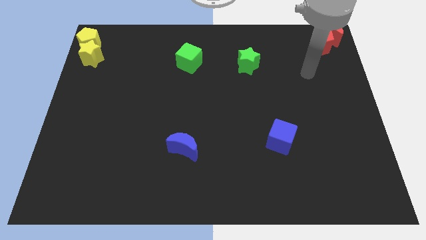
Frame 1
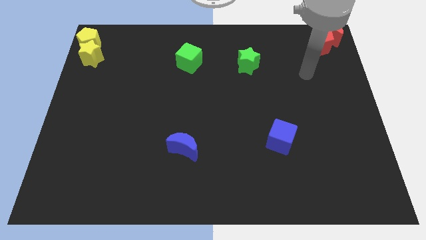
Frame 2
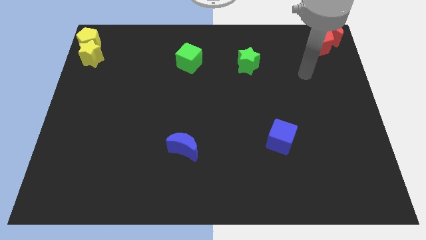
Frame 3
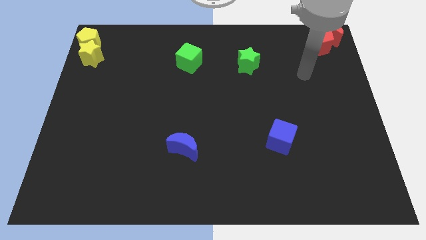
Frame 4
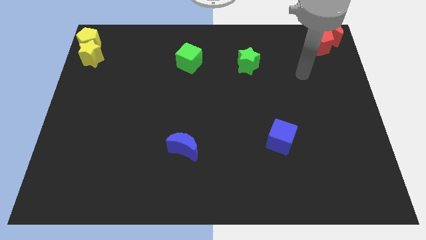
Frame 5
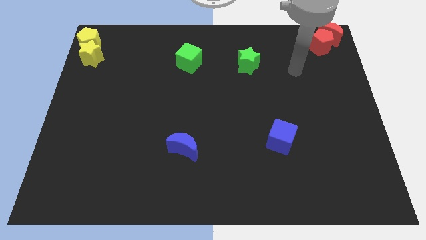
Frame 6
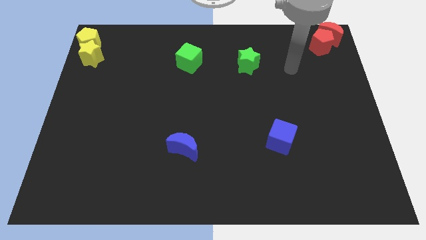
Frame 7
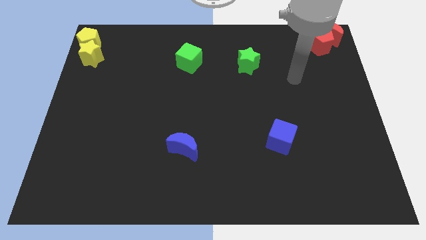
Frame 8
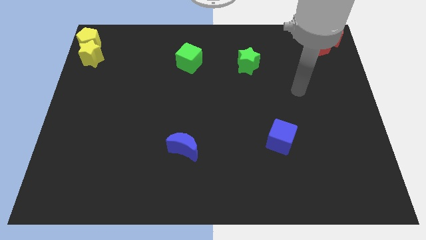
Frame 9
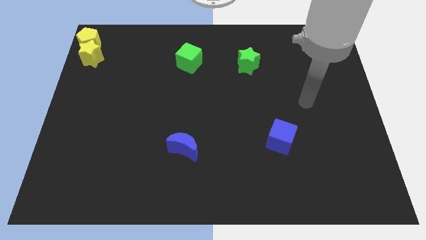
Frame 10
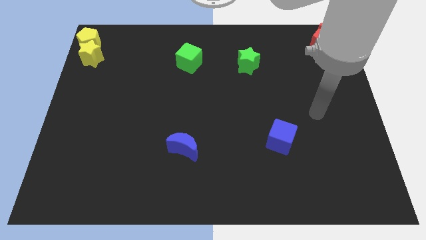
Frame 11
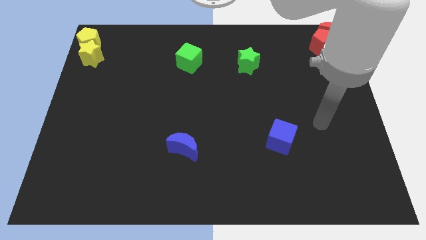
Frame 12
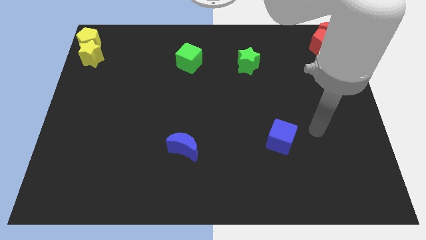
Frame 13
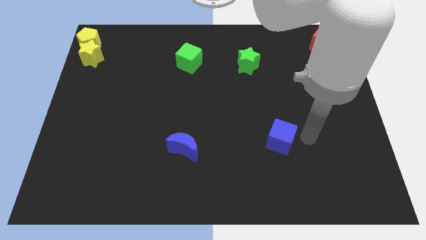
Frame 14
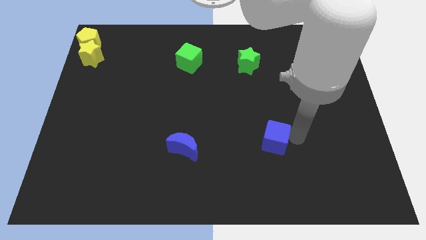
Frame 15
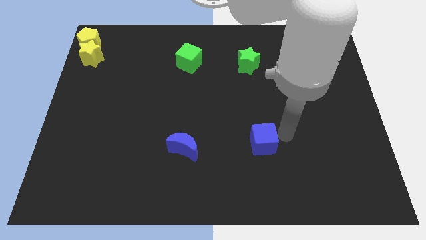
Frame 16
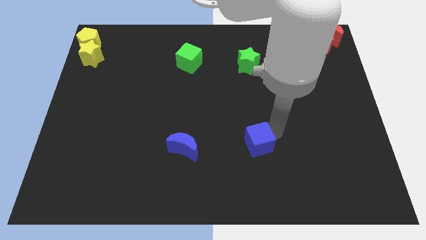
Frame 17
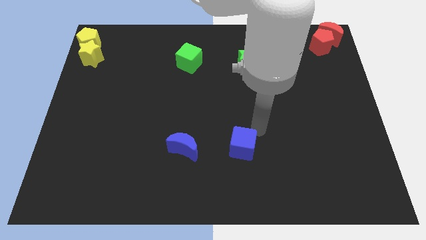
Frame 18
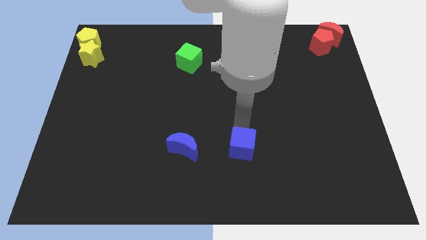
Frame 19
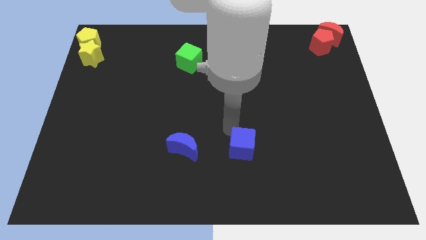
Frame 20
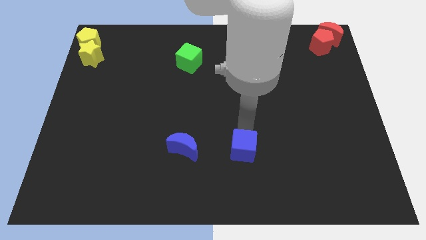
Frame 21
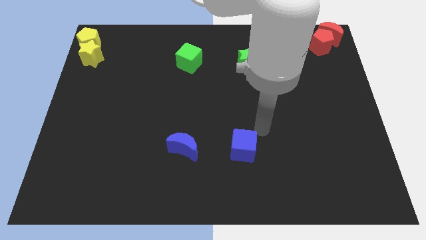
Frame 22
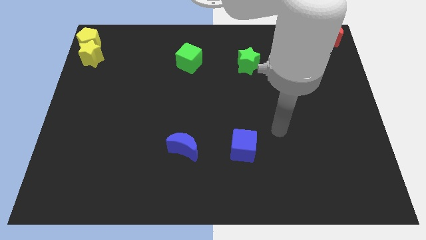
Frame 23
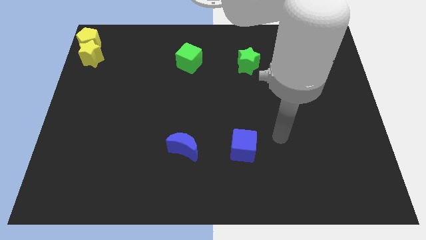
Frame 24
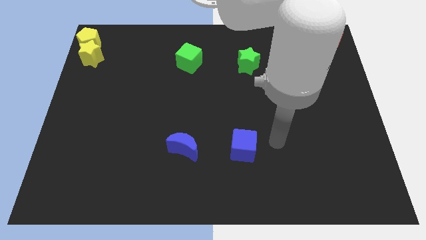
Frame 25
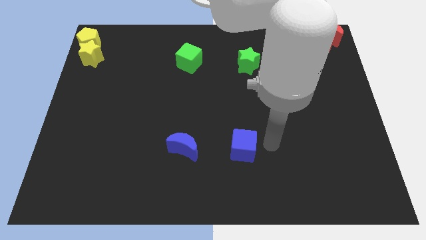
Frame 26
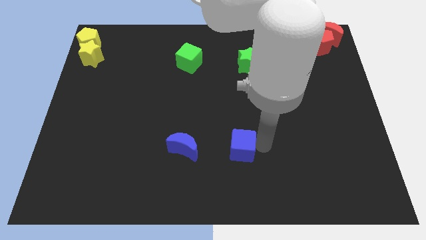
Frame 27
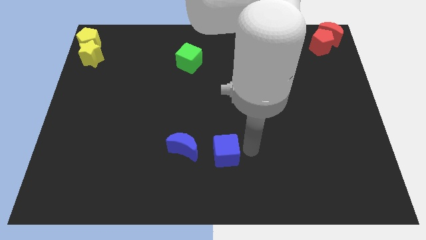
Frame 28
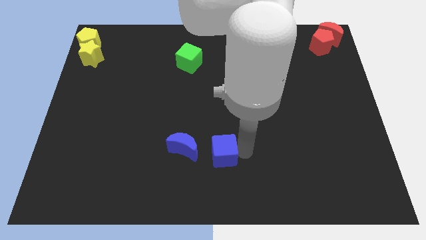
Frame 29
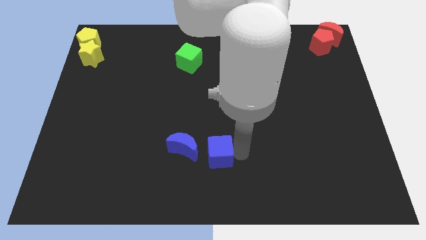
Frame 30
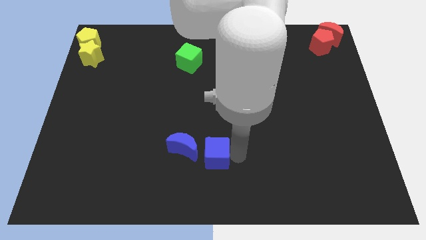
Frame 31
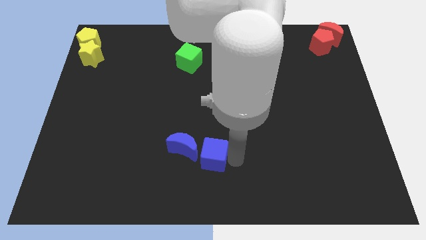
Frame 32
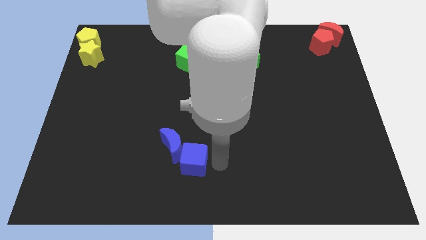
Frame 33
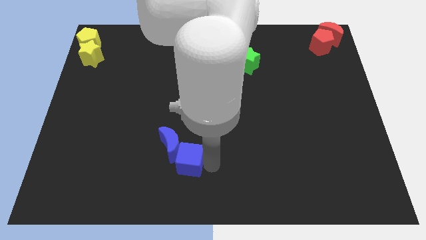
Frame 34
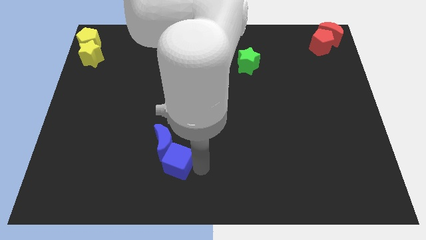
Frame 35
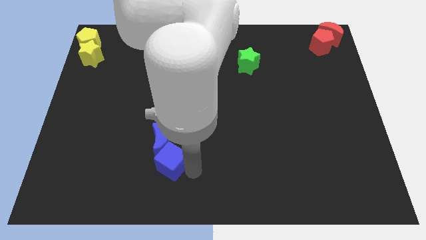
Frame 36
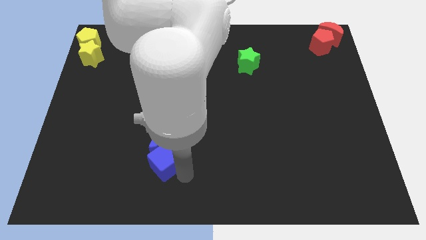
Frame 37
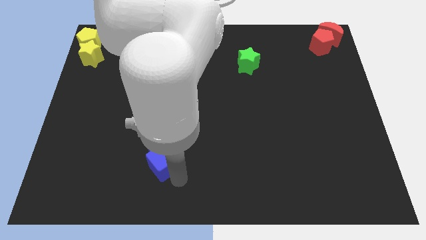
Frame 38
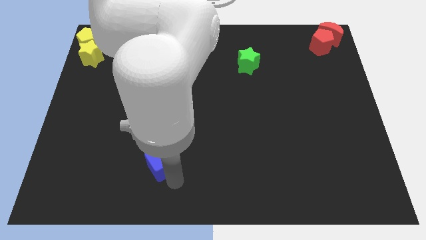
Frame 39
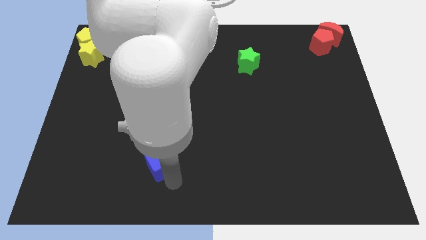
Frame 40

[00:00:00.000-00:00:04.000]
push the blue cube to the bottom of the blue crescent

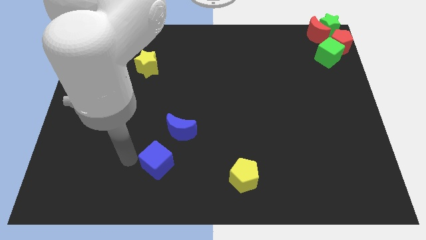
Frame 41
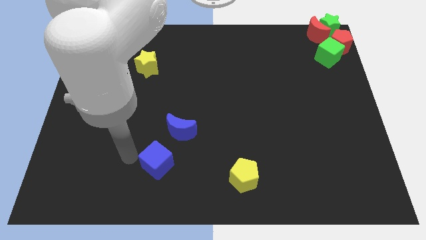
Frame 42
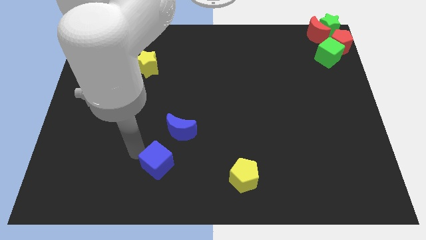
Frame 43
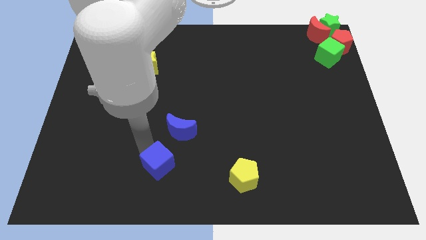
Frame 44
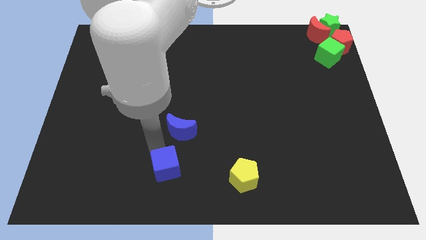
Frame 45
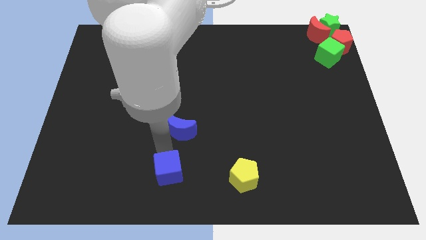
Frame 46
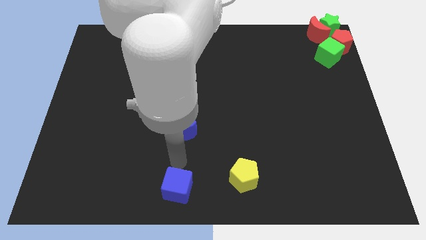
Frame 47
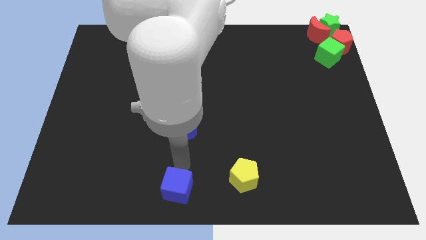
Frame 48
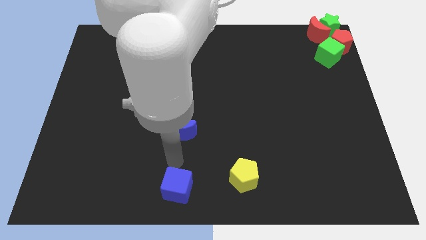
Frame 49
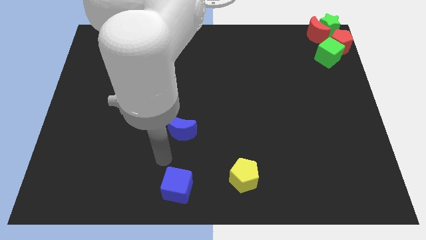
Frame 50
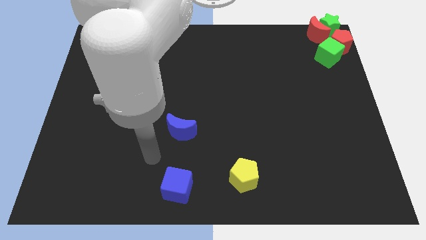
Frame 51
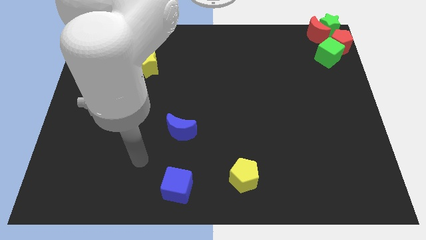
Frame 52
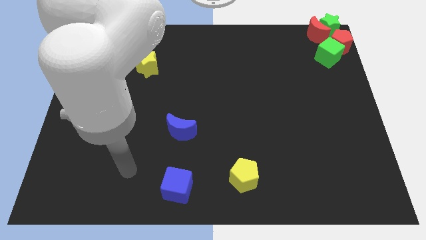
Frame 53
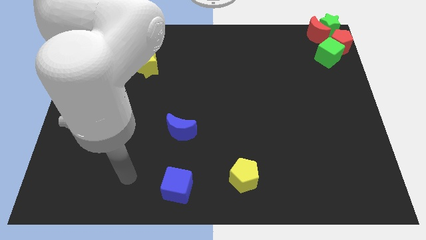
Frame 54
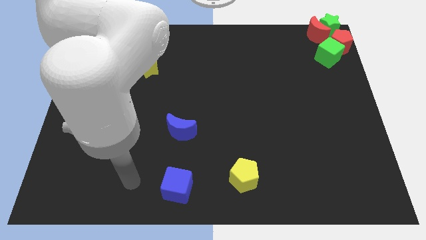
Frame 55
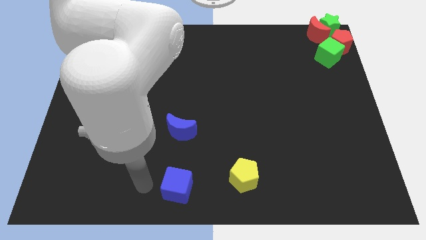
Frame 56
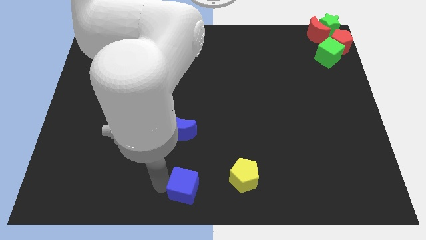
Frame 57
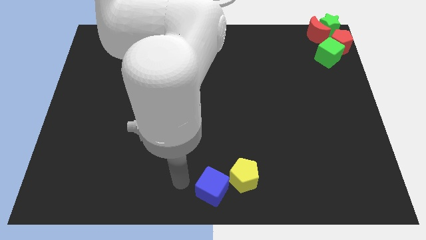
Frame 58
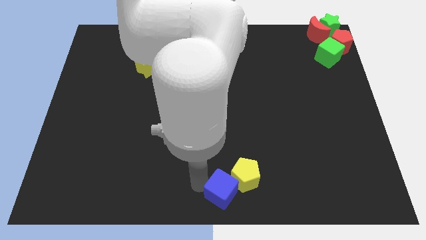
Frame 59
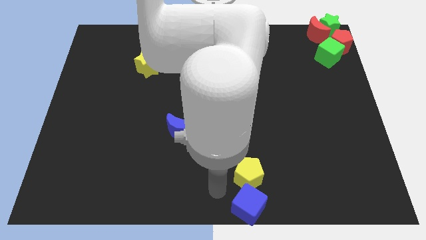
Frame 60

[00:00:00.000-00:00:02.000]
push the blue cube towards the bottom center of the board

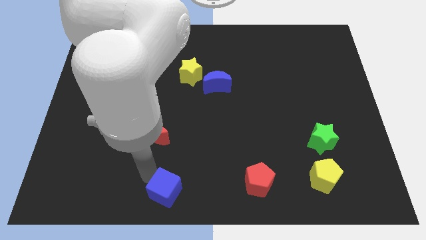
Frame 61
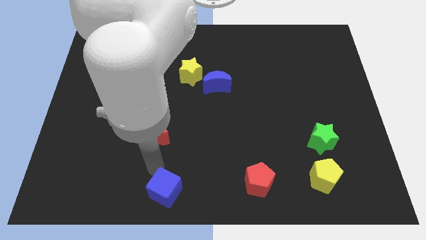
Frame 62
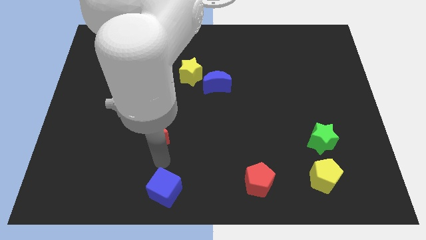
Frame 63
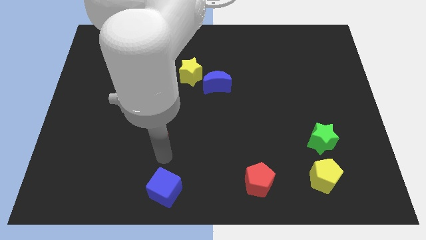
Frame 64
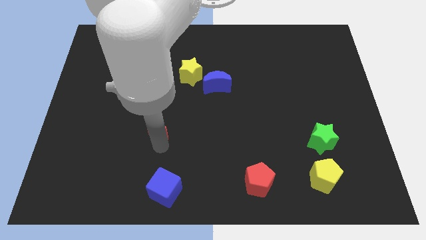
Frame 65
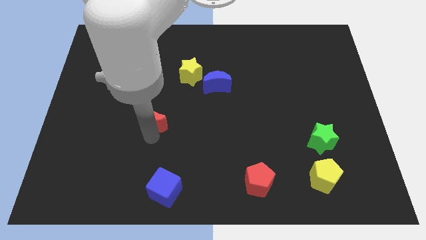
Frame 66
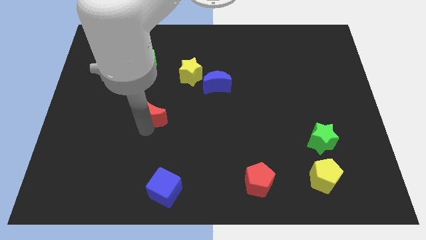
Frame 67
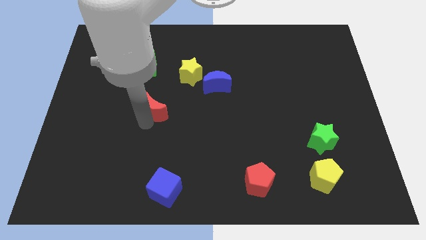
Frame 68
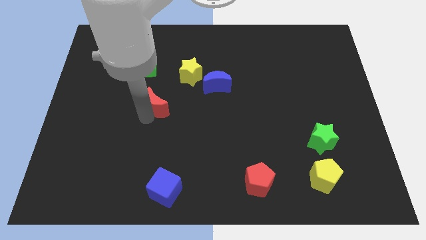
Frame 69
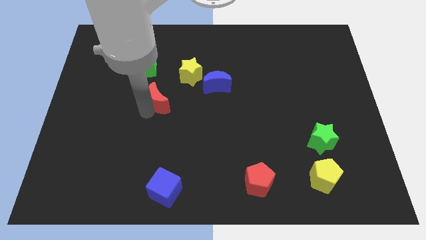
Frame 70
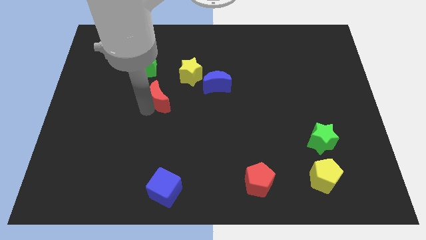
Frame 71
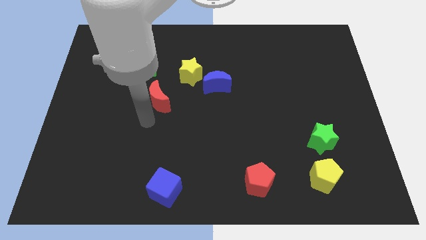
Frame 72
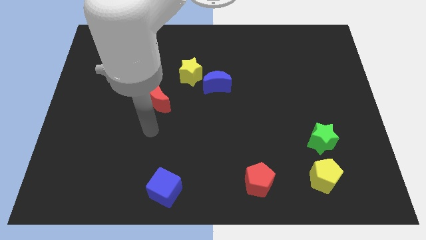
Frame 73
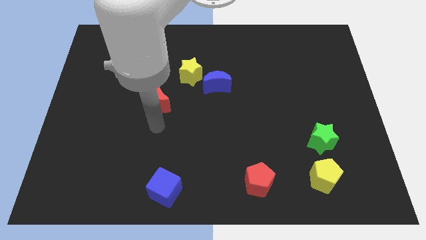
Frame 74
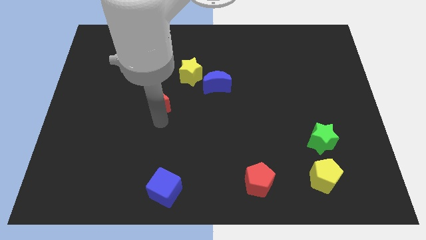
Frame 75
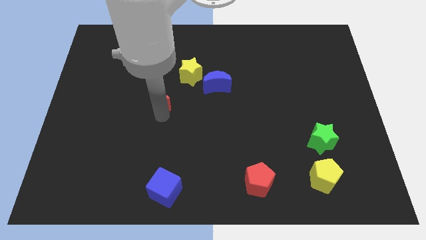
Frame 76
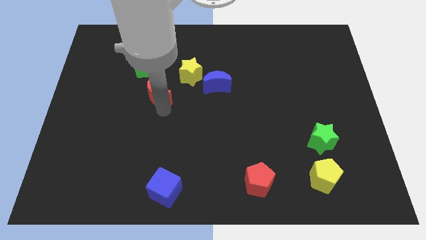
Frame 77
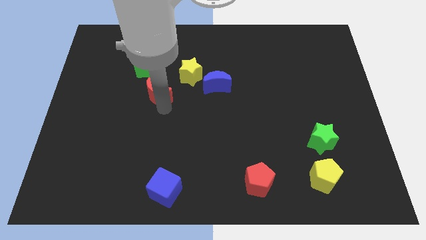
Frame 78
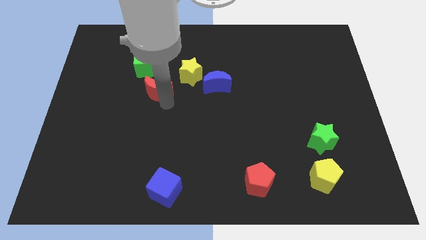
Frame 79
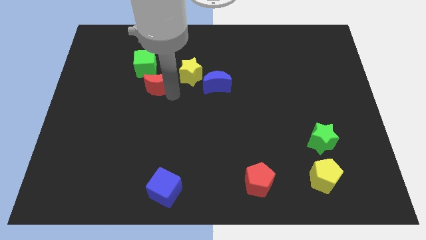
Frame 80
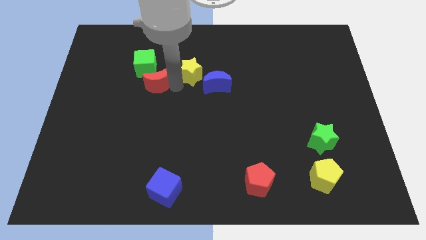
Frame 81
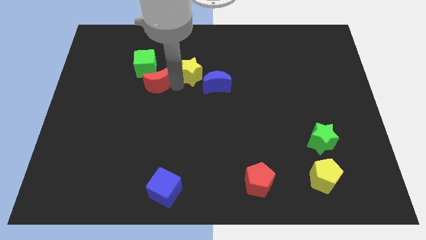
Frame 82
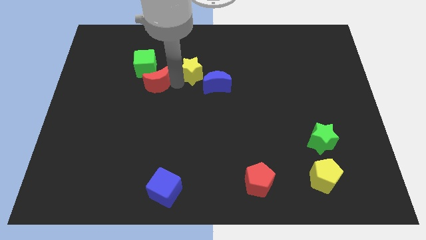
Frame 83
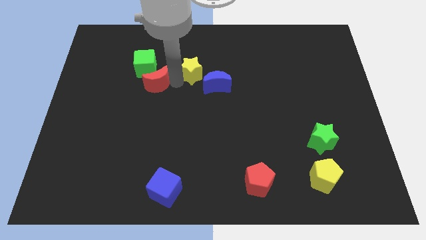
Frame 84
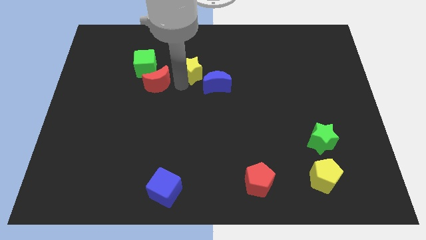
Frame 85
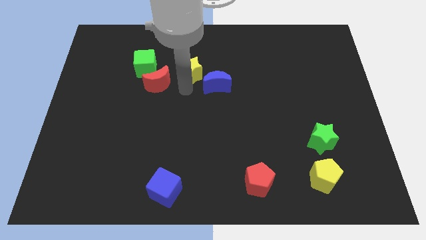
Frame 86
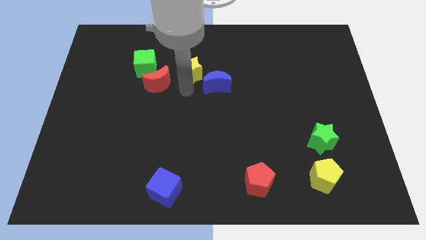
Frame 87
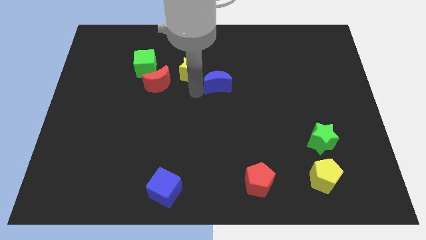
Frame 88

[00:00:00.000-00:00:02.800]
move the red crescent close to the green cube
